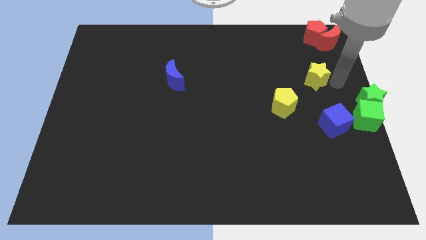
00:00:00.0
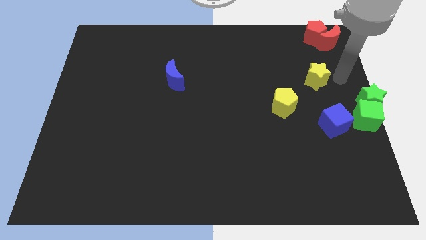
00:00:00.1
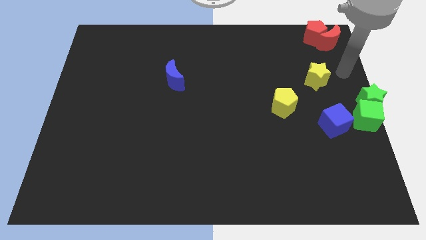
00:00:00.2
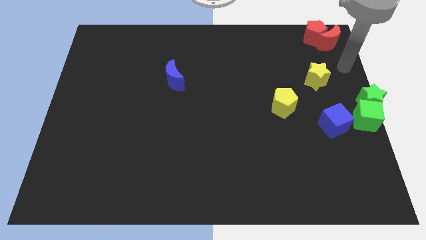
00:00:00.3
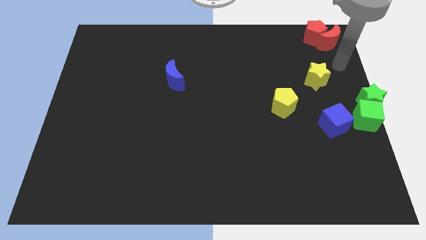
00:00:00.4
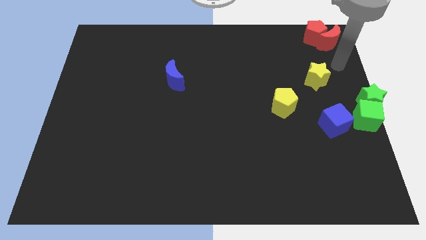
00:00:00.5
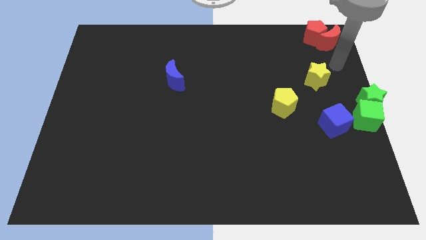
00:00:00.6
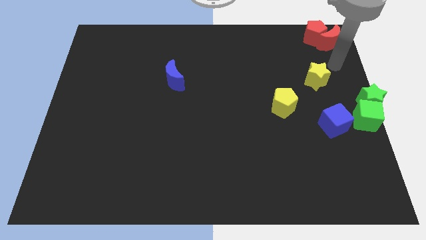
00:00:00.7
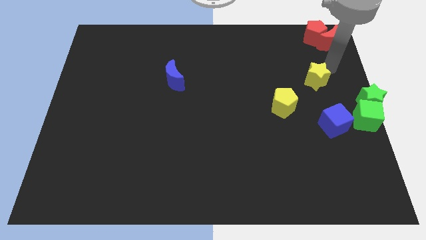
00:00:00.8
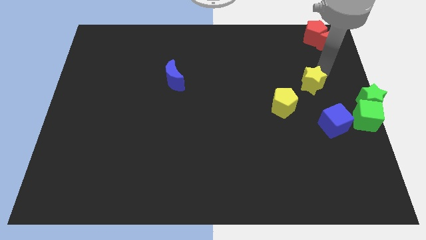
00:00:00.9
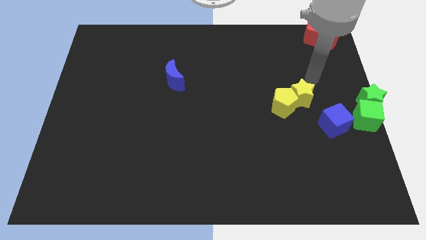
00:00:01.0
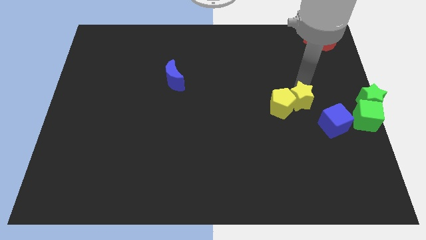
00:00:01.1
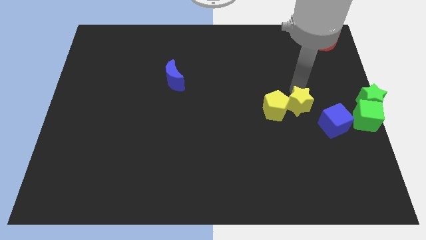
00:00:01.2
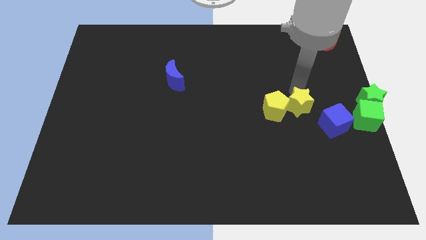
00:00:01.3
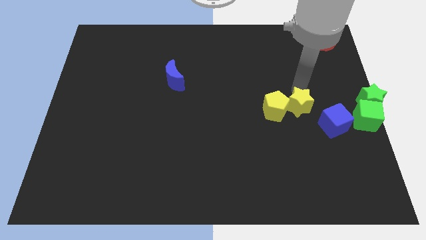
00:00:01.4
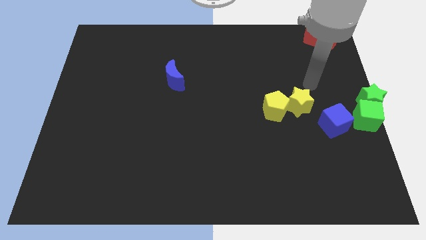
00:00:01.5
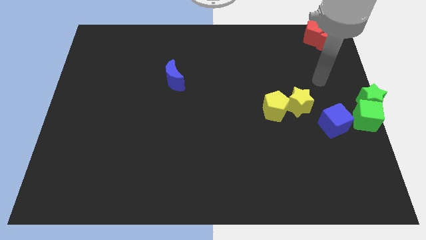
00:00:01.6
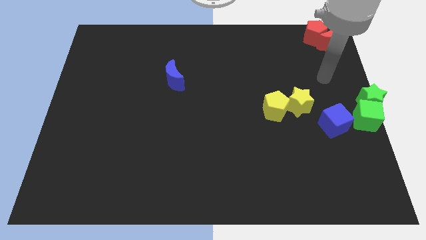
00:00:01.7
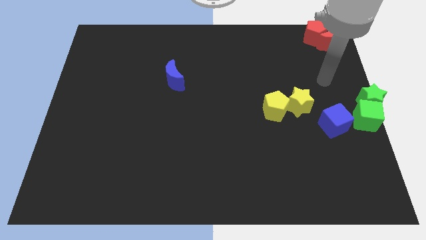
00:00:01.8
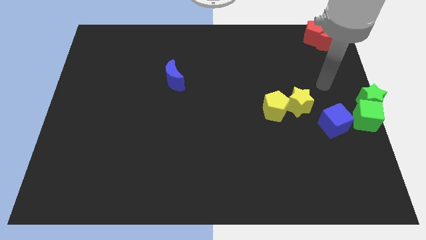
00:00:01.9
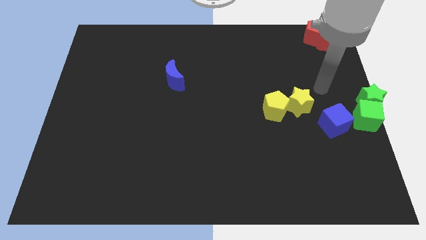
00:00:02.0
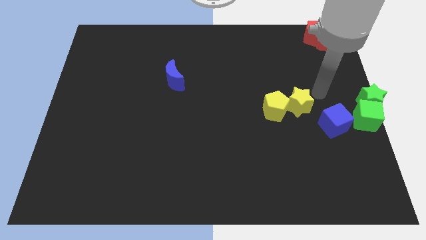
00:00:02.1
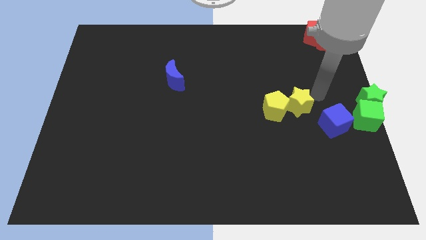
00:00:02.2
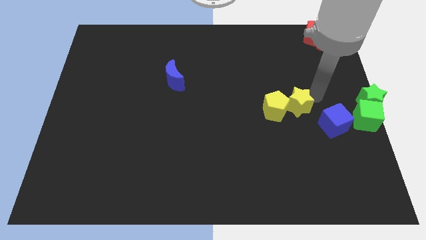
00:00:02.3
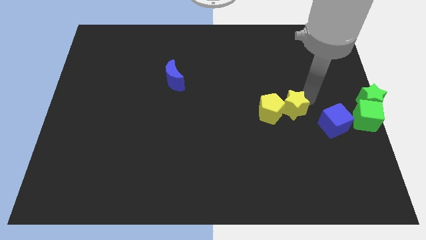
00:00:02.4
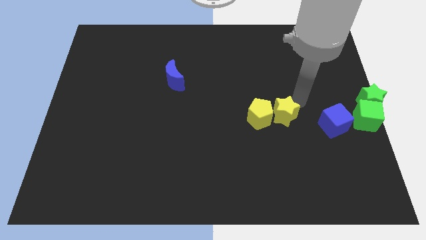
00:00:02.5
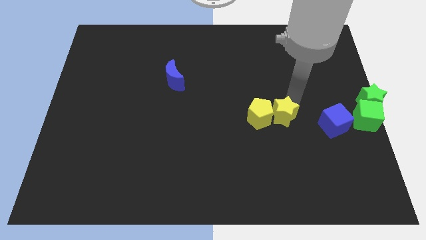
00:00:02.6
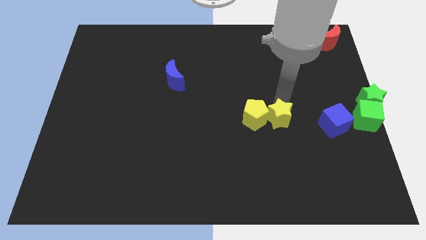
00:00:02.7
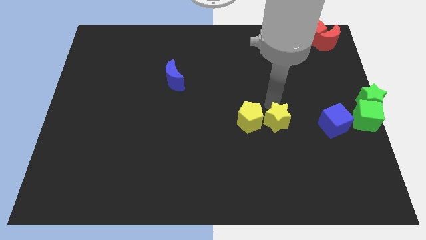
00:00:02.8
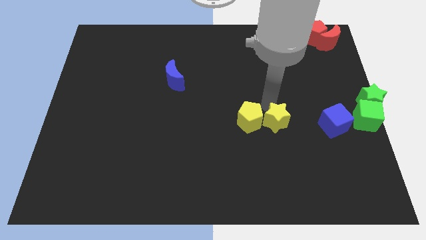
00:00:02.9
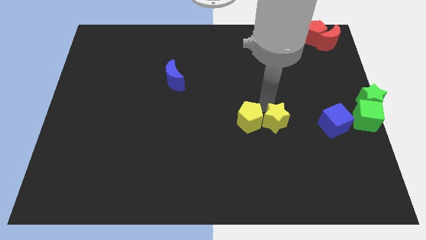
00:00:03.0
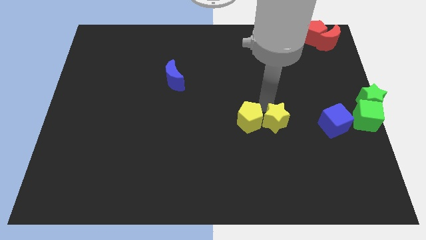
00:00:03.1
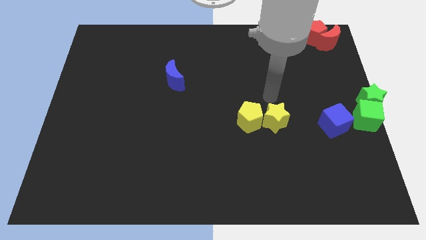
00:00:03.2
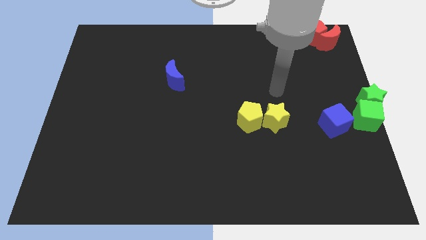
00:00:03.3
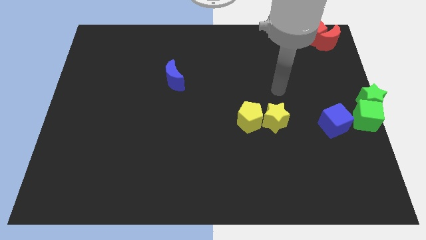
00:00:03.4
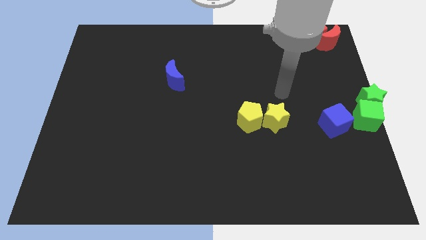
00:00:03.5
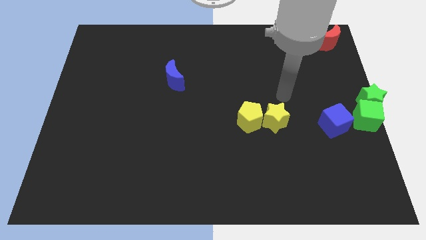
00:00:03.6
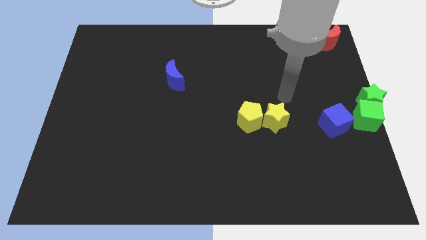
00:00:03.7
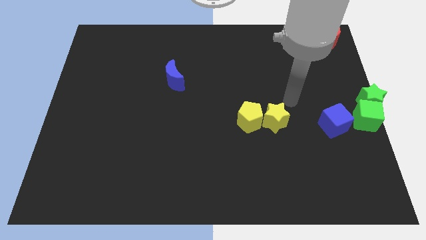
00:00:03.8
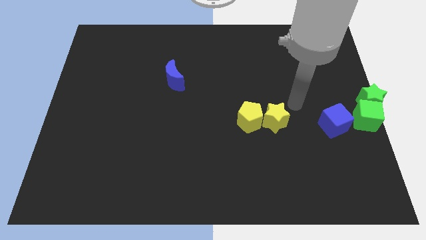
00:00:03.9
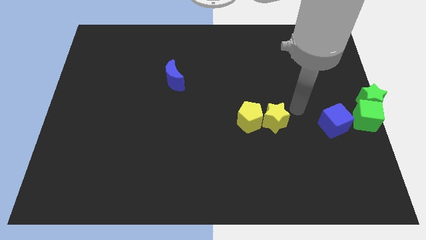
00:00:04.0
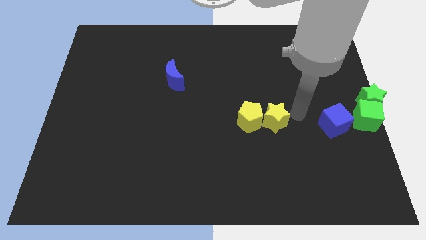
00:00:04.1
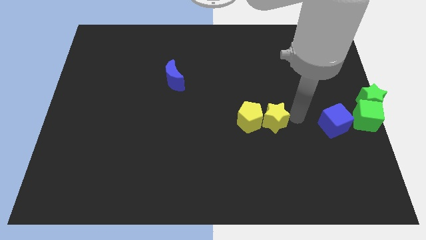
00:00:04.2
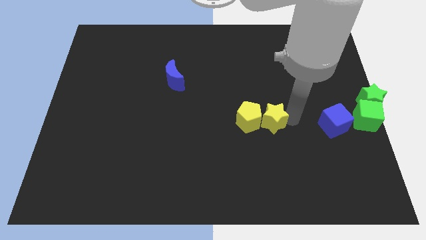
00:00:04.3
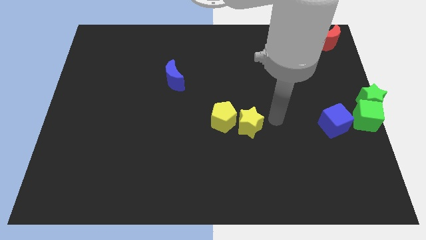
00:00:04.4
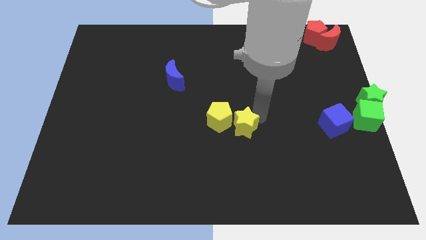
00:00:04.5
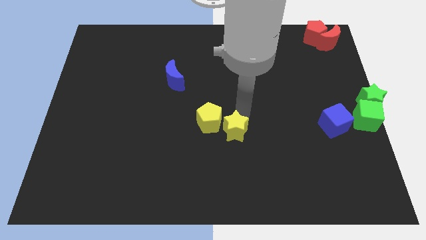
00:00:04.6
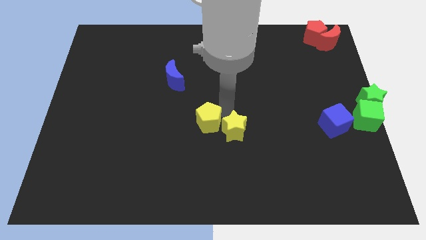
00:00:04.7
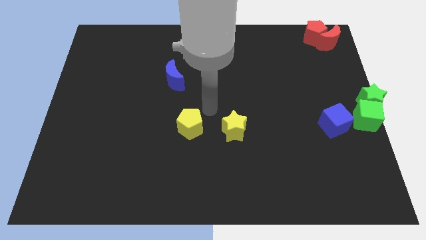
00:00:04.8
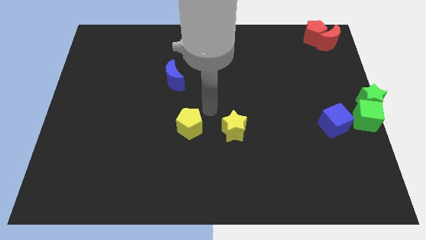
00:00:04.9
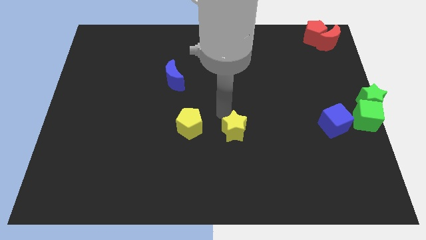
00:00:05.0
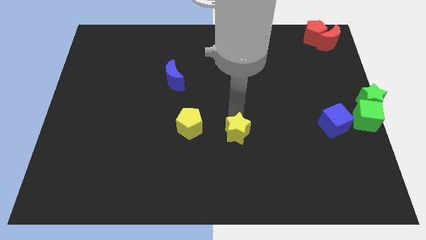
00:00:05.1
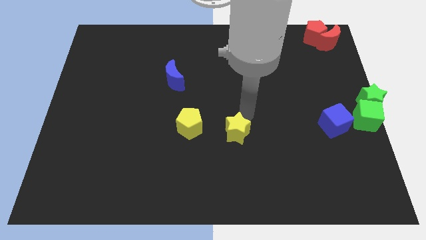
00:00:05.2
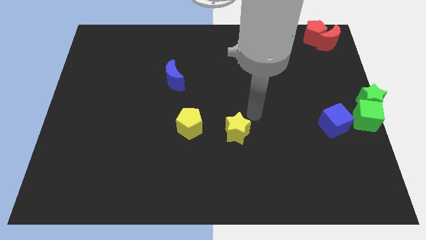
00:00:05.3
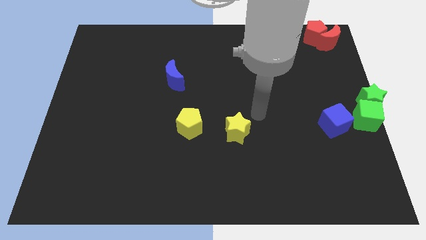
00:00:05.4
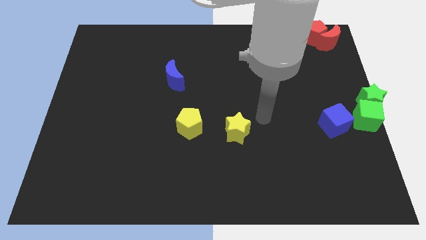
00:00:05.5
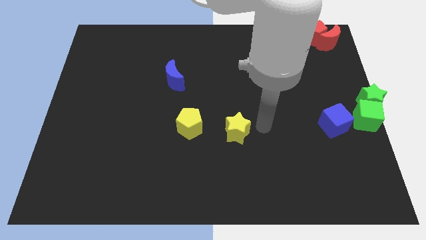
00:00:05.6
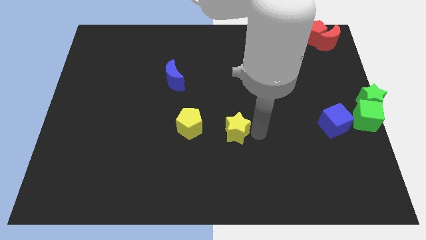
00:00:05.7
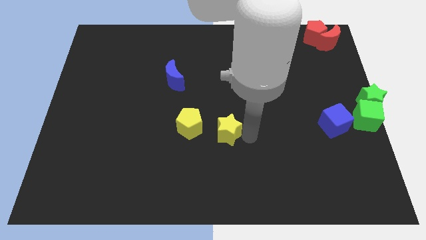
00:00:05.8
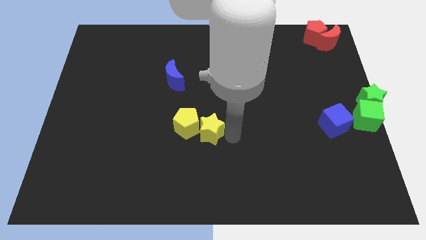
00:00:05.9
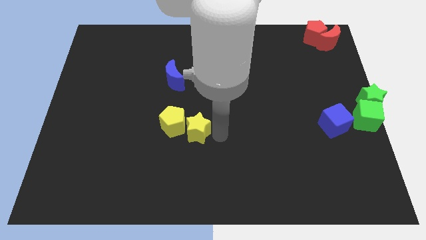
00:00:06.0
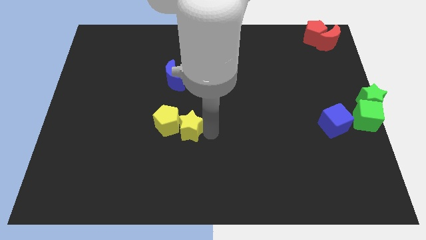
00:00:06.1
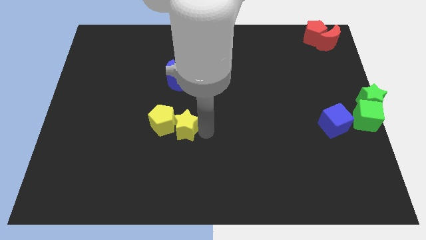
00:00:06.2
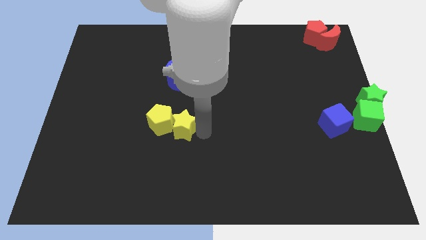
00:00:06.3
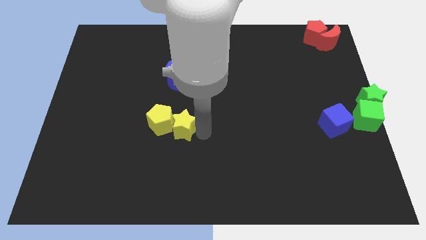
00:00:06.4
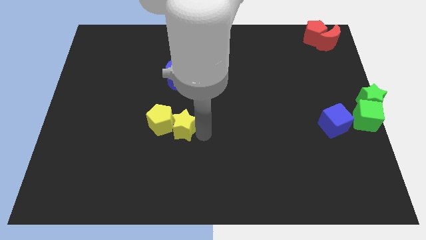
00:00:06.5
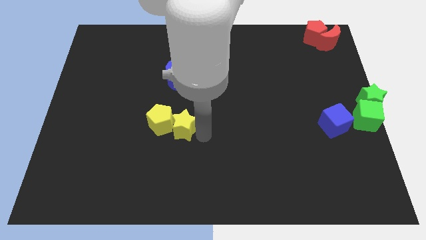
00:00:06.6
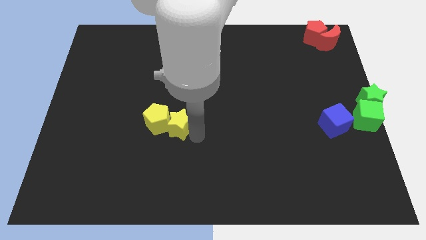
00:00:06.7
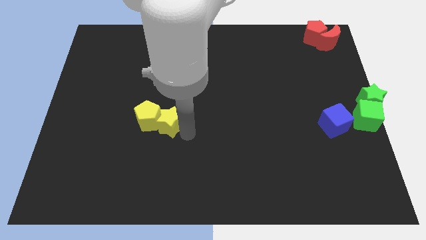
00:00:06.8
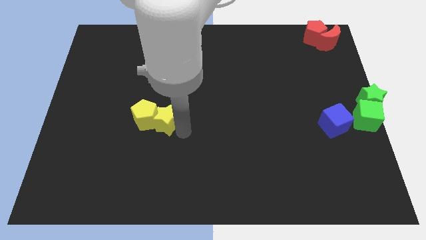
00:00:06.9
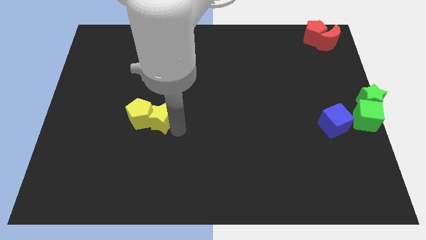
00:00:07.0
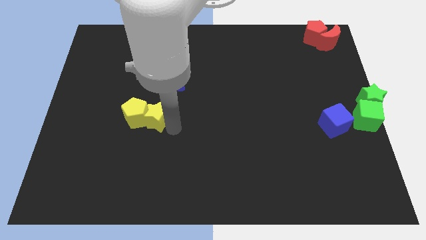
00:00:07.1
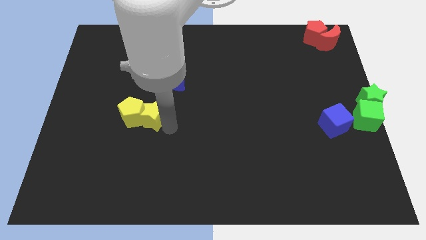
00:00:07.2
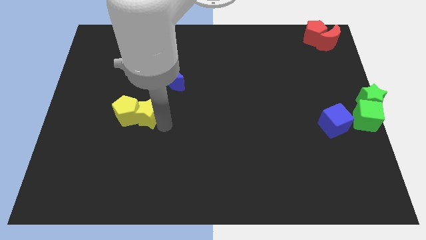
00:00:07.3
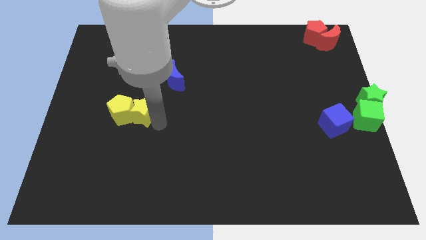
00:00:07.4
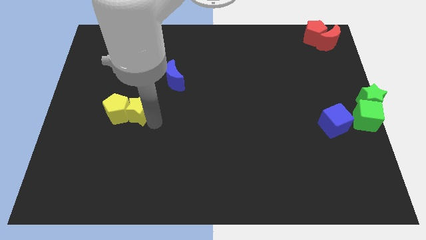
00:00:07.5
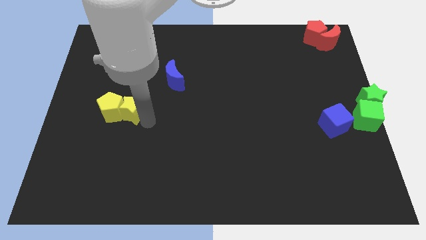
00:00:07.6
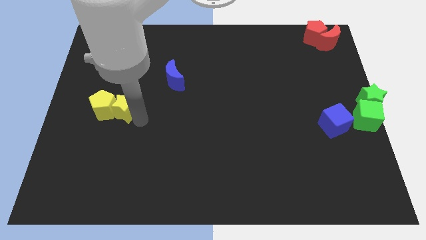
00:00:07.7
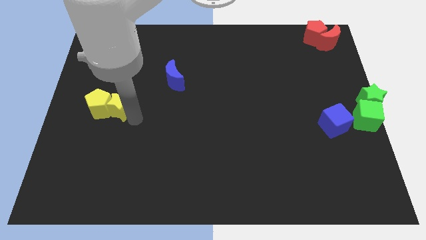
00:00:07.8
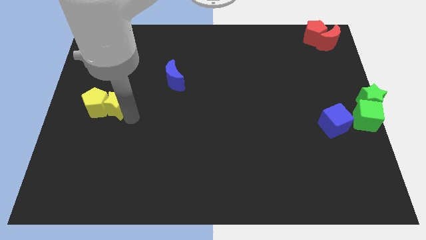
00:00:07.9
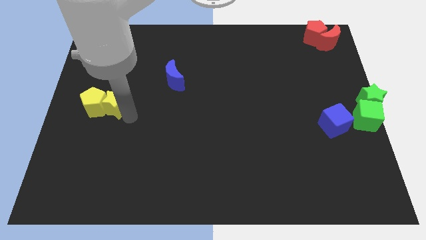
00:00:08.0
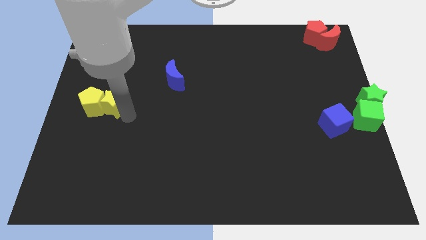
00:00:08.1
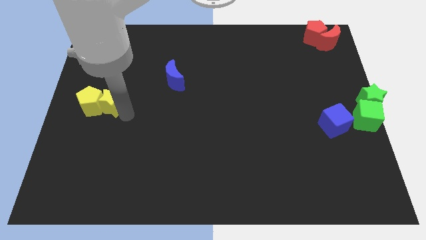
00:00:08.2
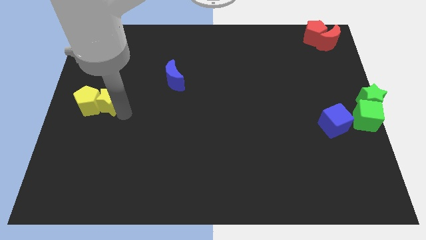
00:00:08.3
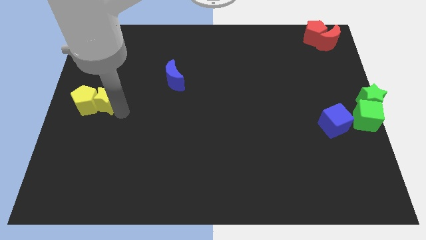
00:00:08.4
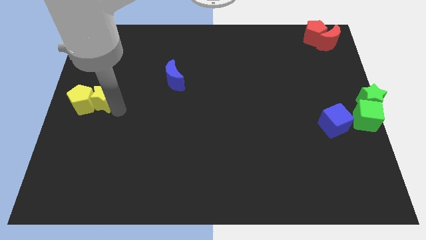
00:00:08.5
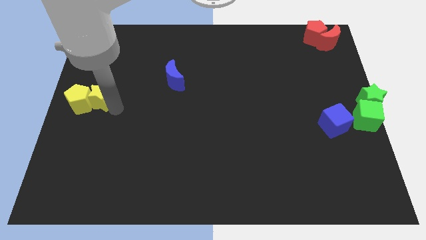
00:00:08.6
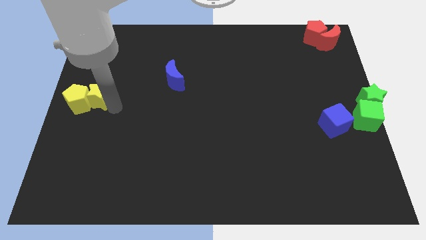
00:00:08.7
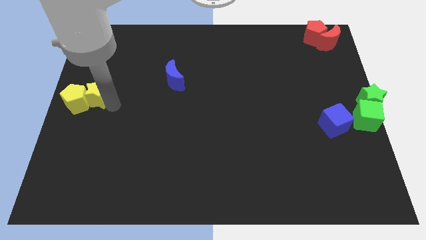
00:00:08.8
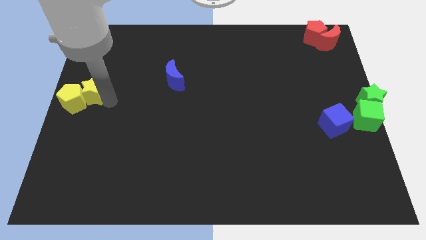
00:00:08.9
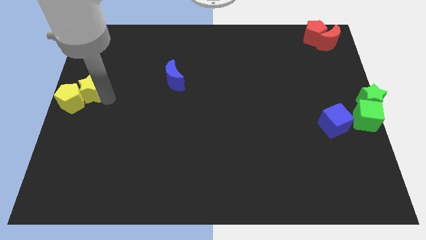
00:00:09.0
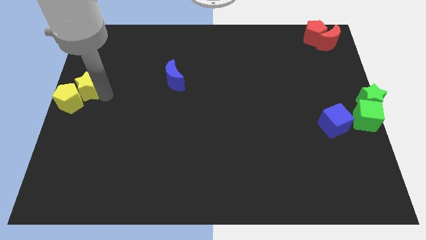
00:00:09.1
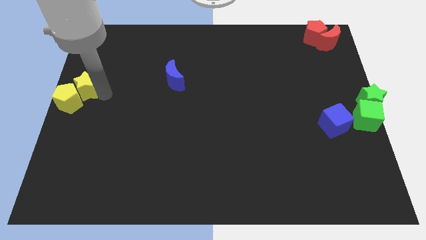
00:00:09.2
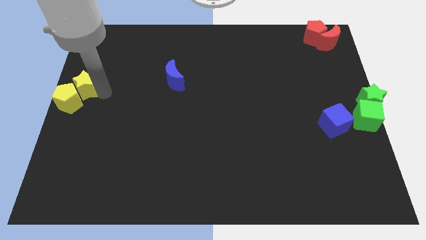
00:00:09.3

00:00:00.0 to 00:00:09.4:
push the yellow blocks to the left center of the board
